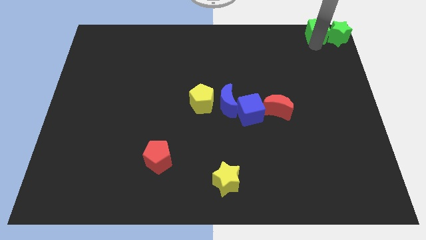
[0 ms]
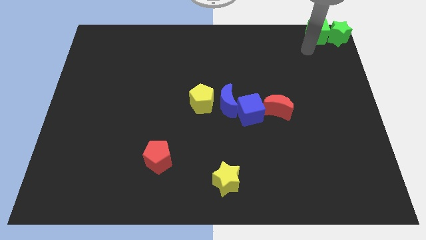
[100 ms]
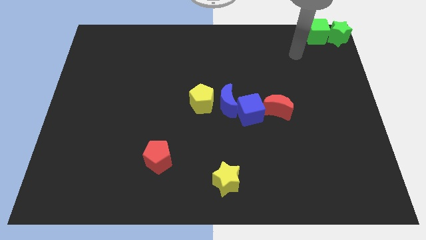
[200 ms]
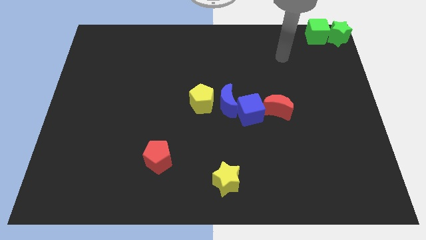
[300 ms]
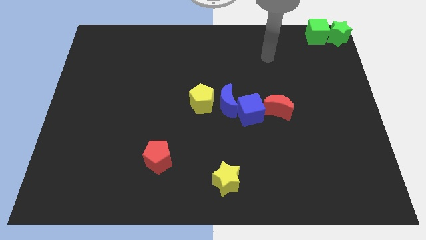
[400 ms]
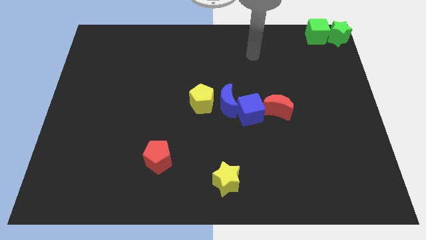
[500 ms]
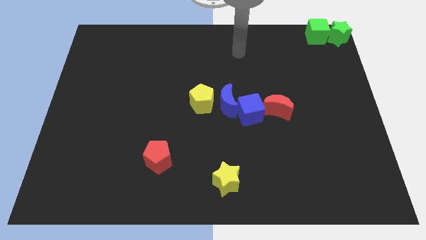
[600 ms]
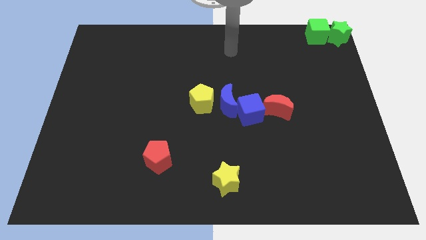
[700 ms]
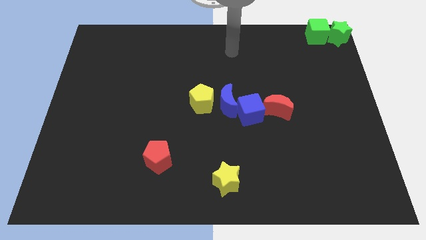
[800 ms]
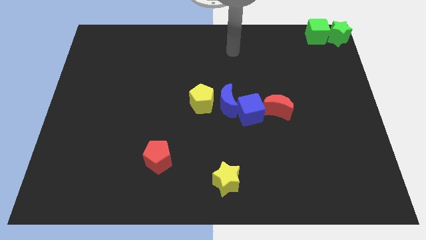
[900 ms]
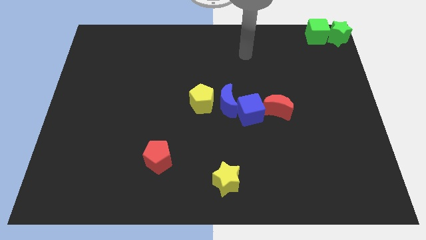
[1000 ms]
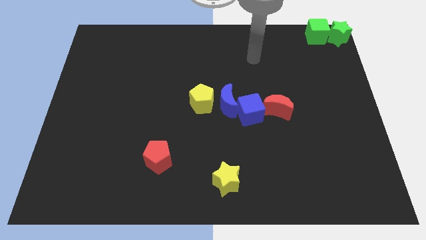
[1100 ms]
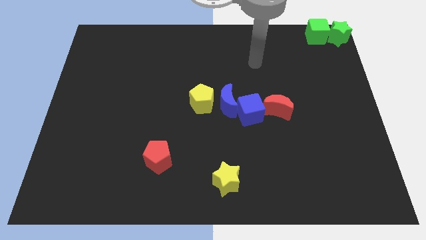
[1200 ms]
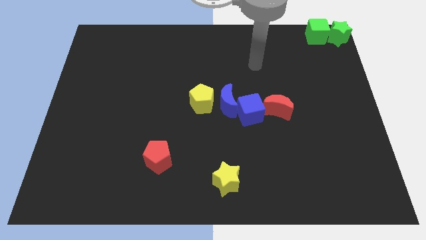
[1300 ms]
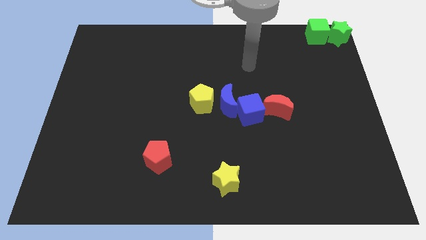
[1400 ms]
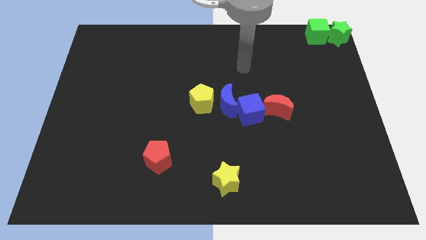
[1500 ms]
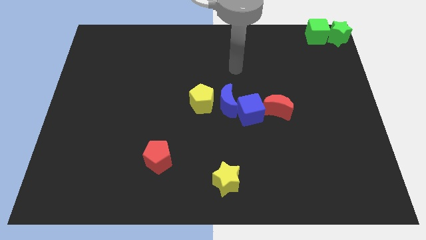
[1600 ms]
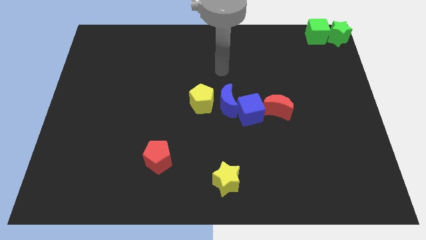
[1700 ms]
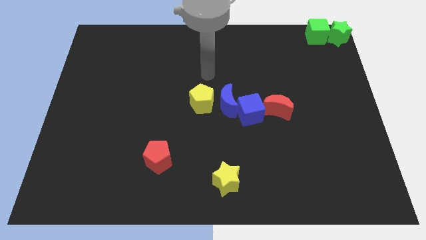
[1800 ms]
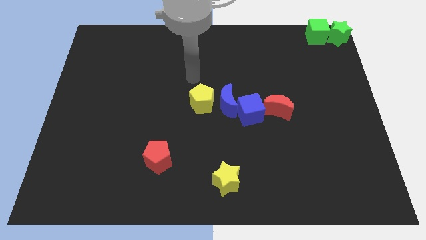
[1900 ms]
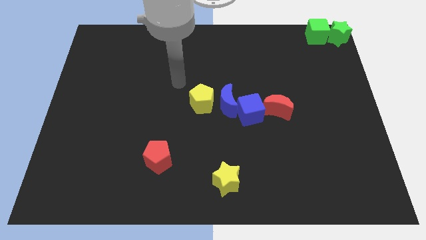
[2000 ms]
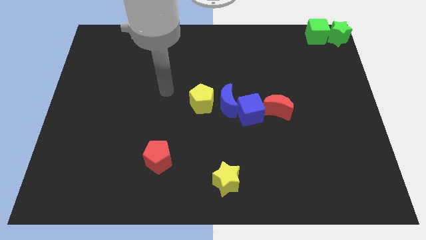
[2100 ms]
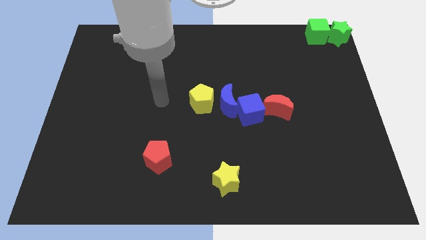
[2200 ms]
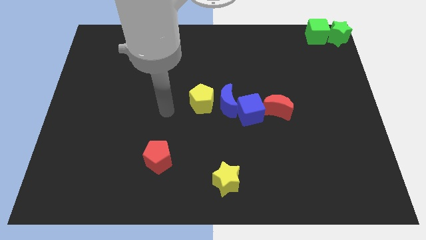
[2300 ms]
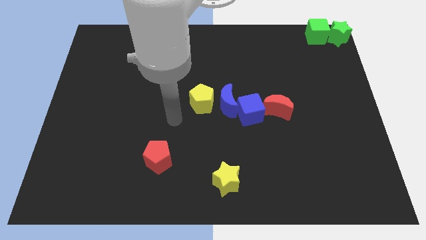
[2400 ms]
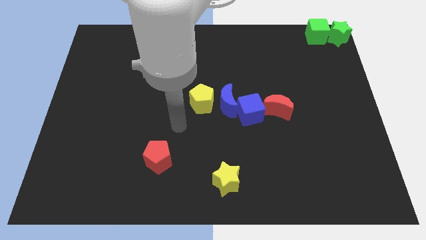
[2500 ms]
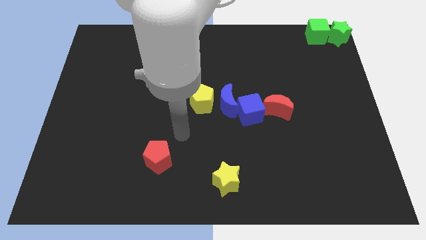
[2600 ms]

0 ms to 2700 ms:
move your arm in between the red and yellow pentagons

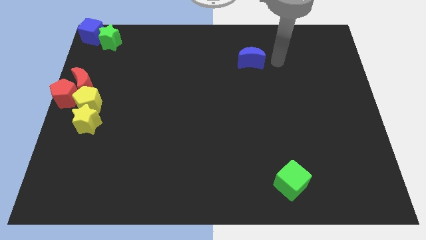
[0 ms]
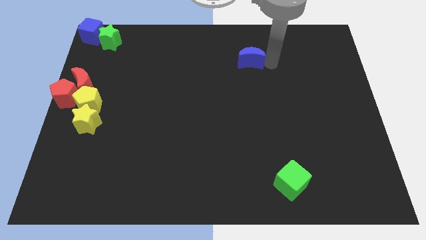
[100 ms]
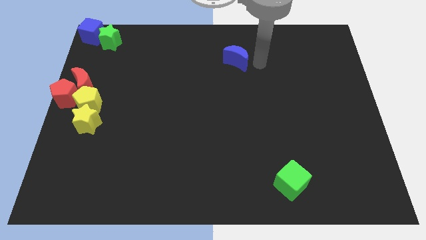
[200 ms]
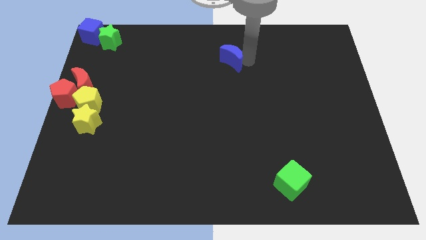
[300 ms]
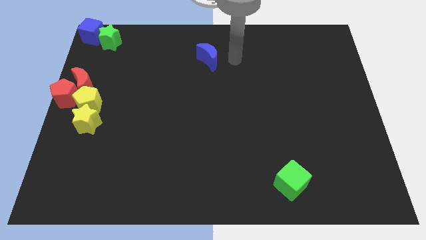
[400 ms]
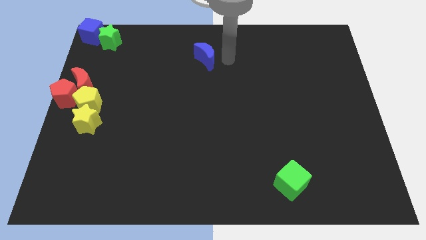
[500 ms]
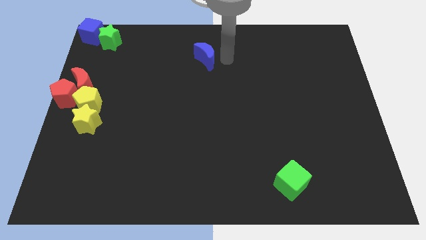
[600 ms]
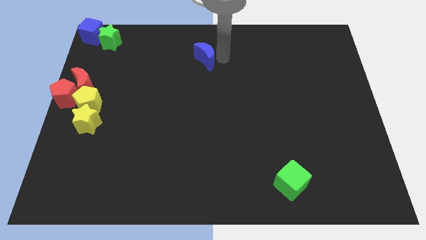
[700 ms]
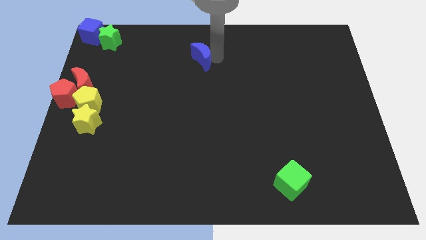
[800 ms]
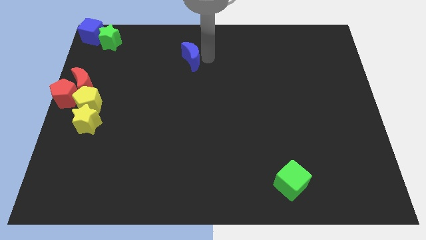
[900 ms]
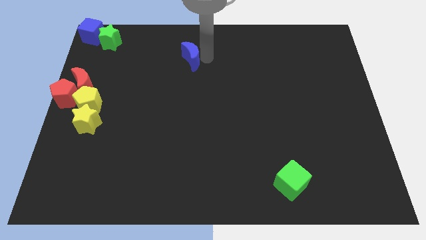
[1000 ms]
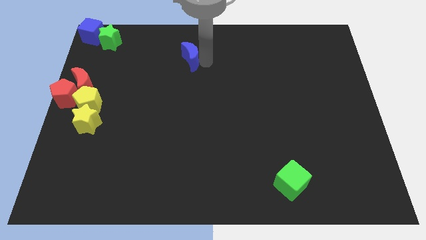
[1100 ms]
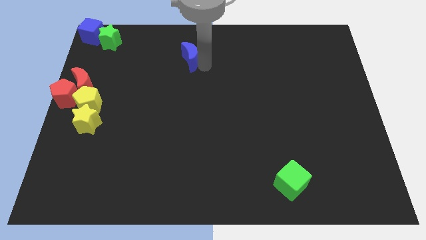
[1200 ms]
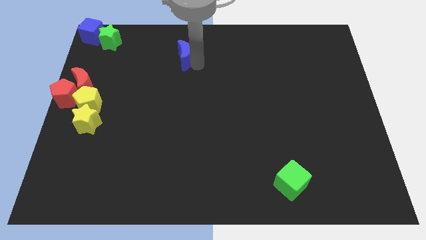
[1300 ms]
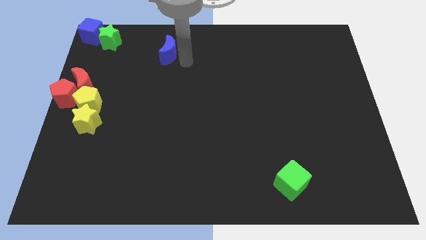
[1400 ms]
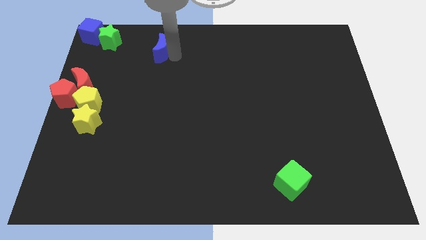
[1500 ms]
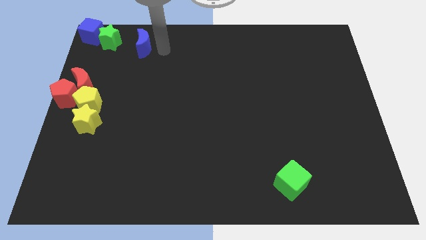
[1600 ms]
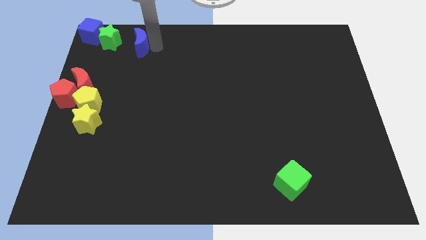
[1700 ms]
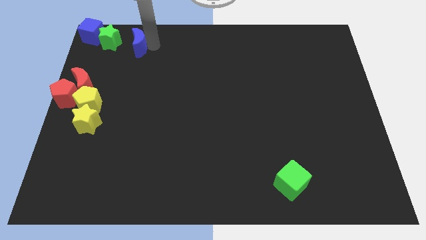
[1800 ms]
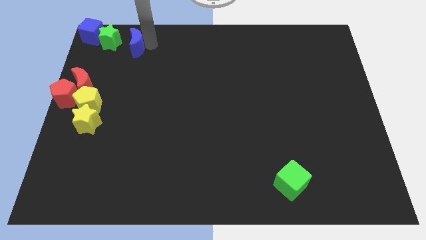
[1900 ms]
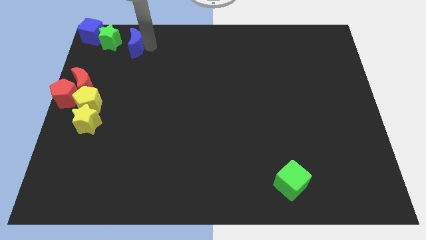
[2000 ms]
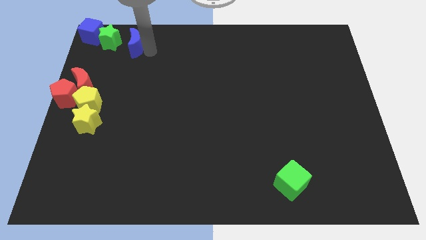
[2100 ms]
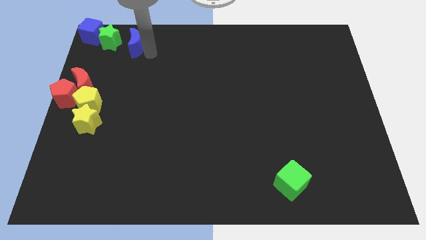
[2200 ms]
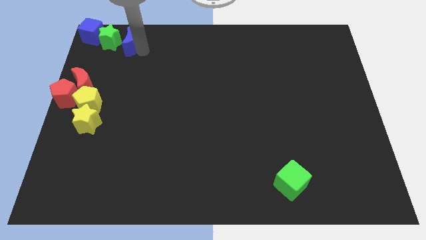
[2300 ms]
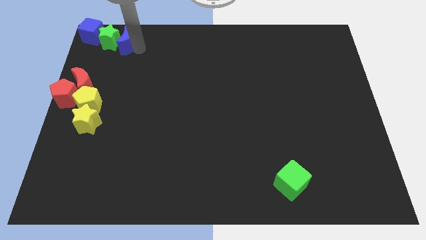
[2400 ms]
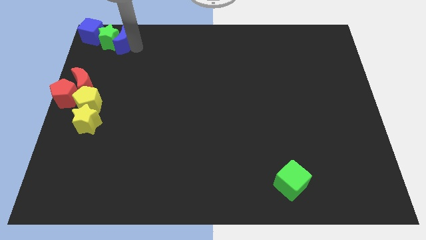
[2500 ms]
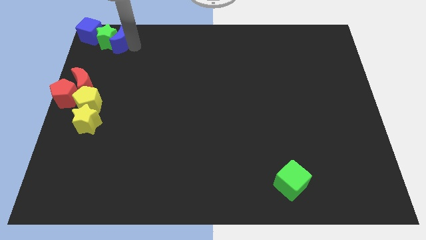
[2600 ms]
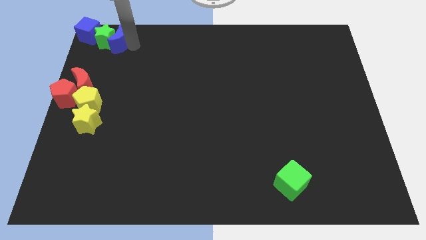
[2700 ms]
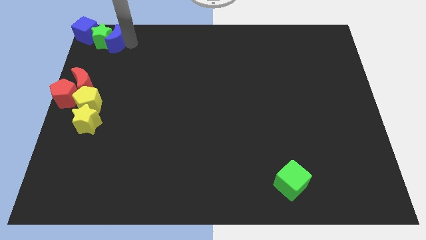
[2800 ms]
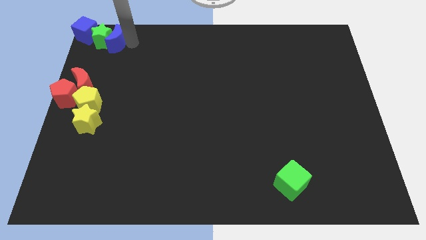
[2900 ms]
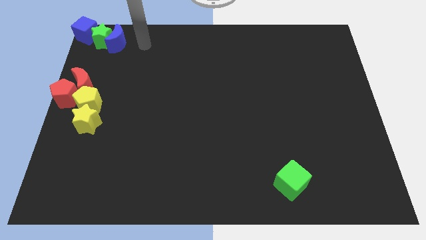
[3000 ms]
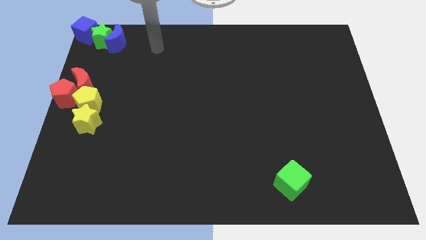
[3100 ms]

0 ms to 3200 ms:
slide the blue moon into the green star

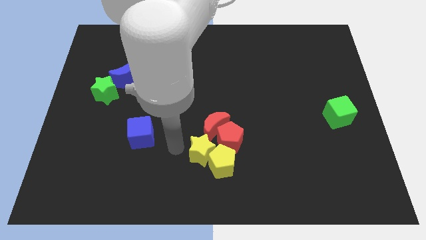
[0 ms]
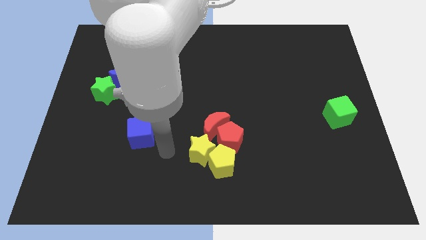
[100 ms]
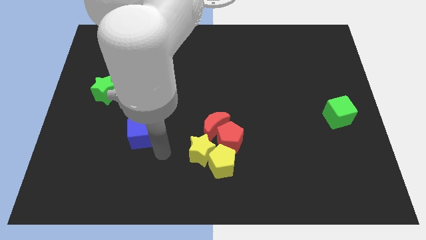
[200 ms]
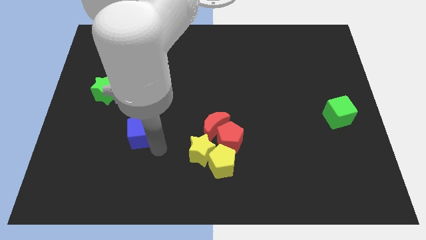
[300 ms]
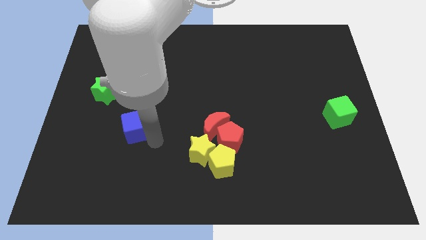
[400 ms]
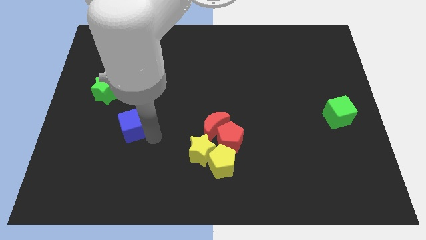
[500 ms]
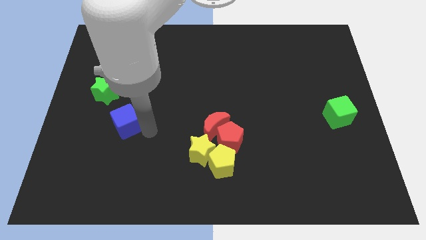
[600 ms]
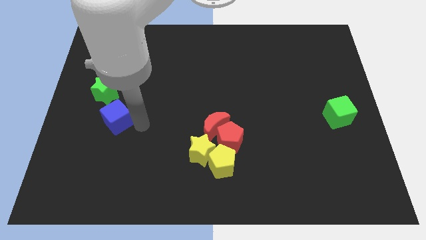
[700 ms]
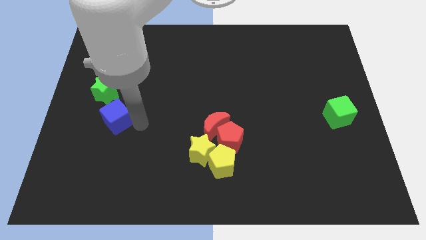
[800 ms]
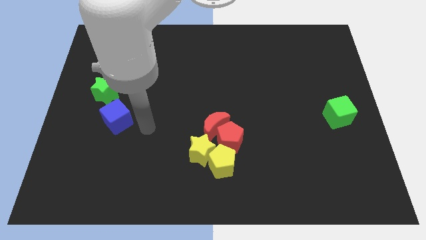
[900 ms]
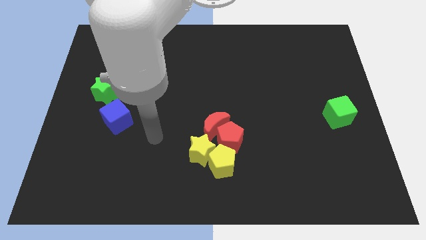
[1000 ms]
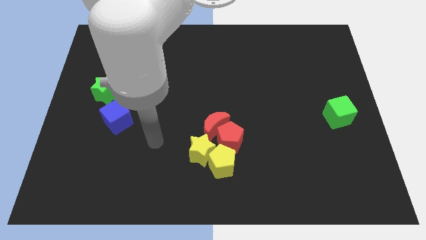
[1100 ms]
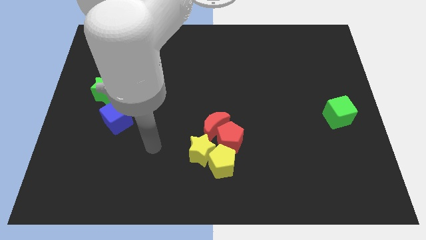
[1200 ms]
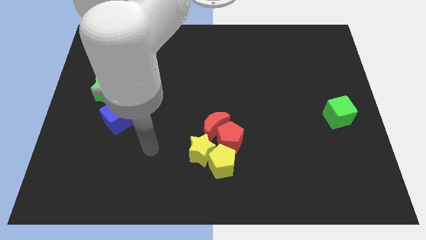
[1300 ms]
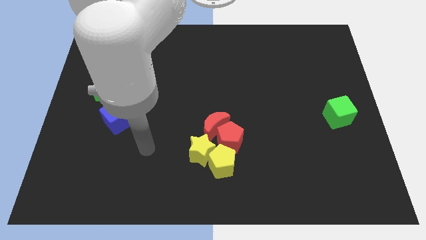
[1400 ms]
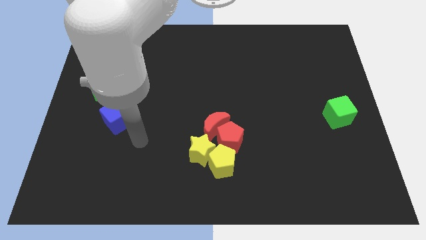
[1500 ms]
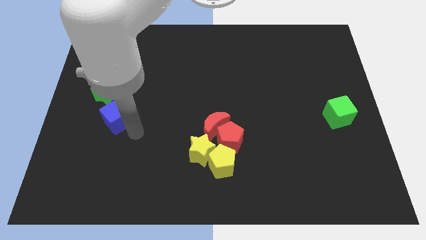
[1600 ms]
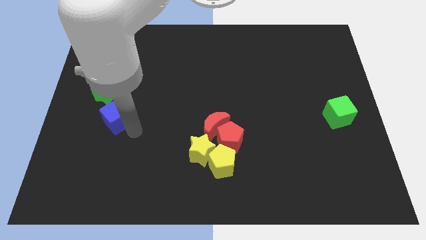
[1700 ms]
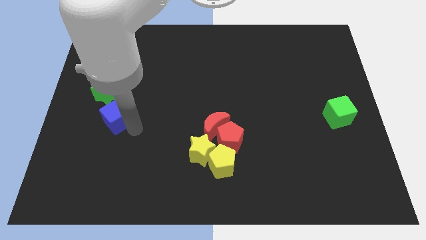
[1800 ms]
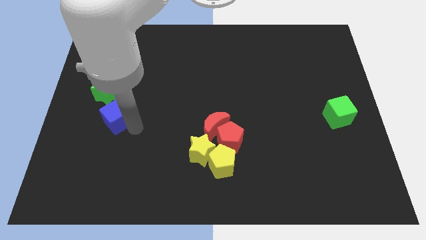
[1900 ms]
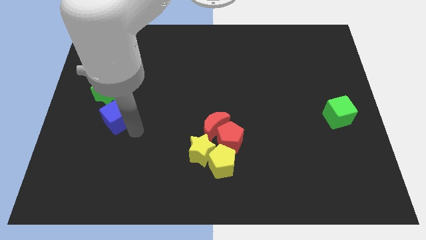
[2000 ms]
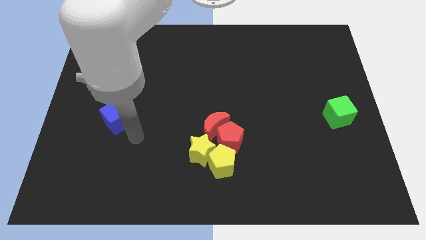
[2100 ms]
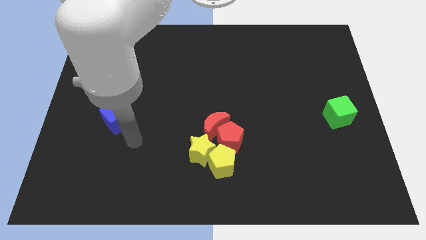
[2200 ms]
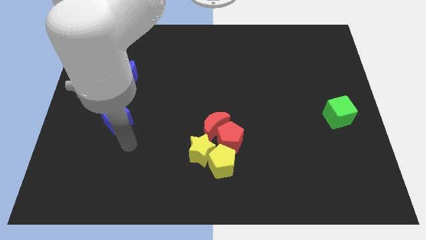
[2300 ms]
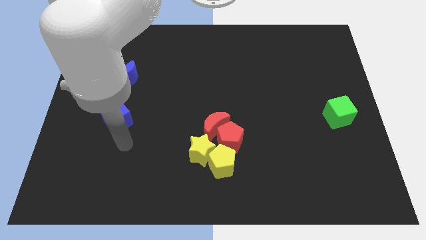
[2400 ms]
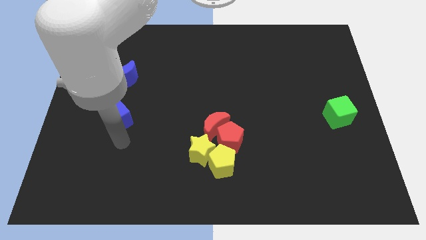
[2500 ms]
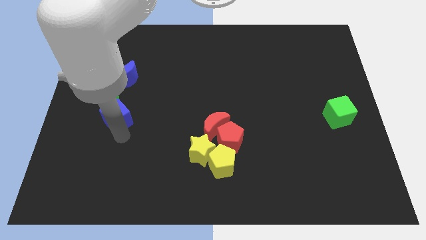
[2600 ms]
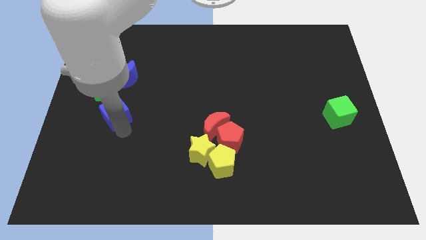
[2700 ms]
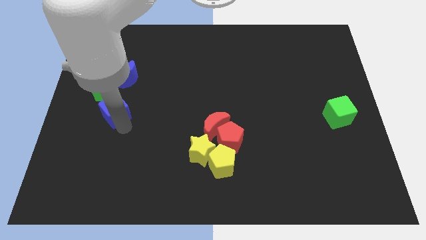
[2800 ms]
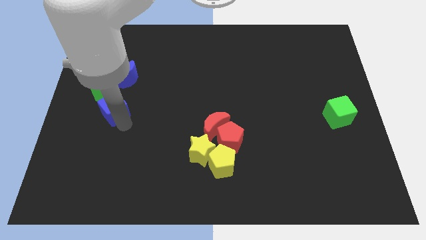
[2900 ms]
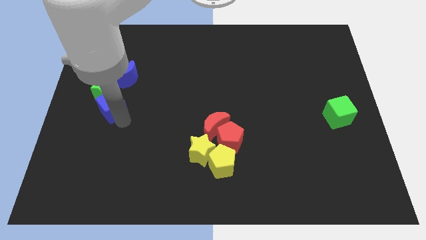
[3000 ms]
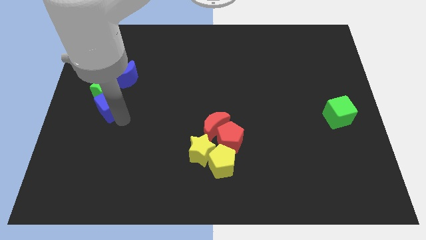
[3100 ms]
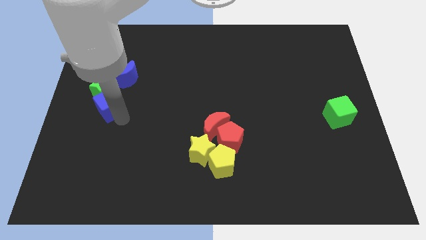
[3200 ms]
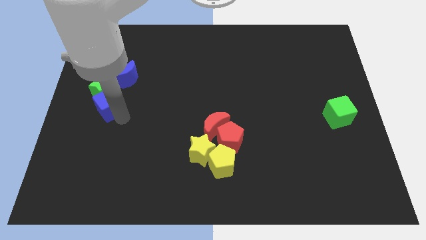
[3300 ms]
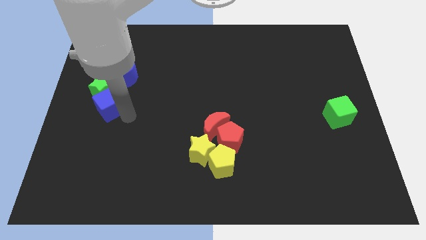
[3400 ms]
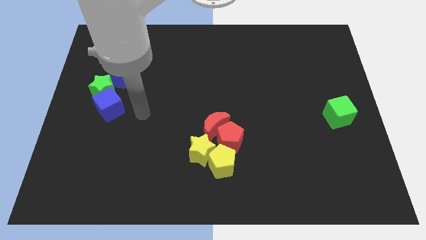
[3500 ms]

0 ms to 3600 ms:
push the blue cube into the green star
